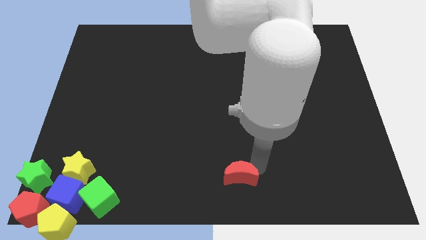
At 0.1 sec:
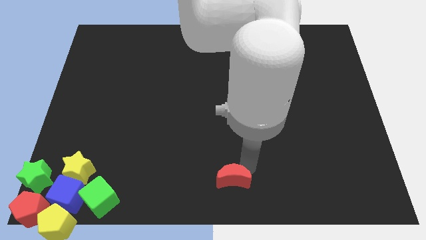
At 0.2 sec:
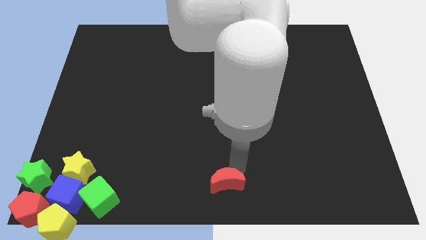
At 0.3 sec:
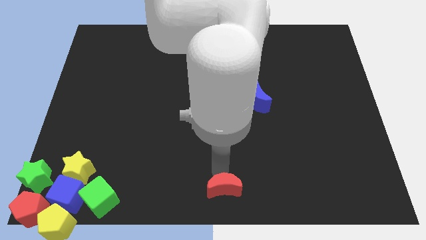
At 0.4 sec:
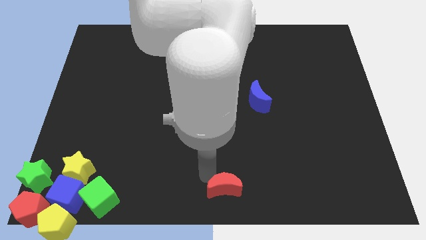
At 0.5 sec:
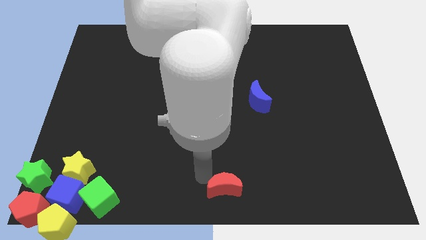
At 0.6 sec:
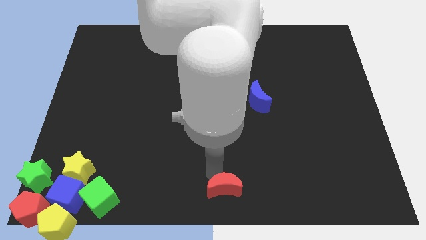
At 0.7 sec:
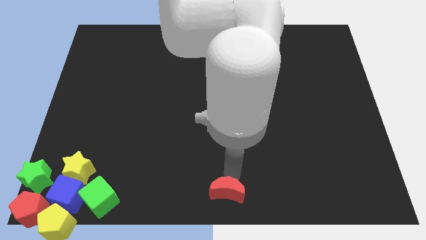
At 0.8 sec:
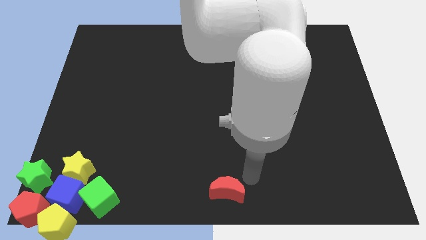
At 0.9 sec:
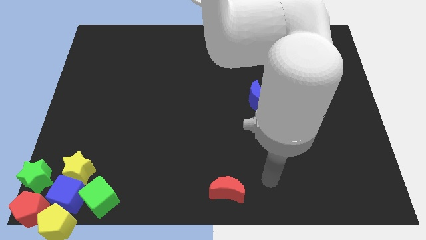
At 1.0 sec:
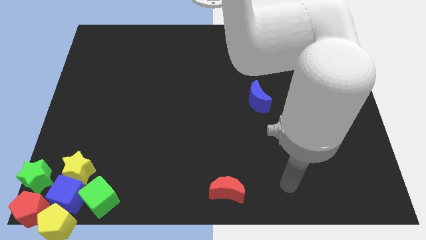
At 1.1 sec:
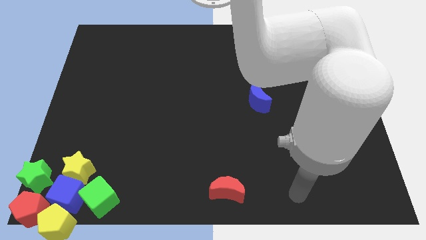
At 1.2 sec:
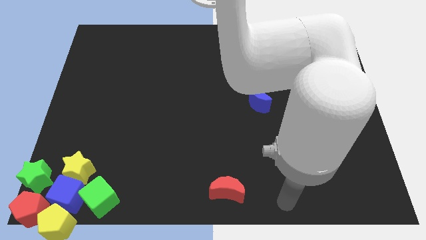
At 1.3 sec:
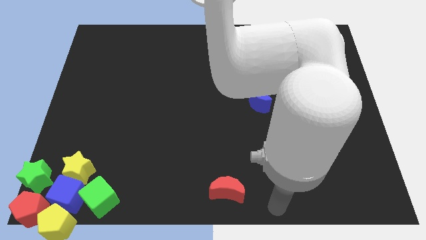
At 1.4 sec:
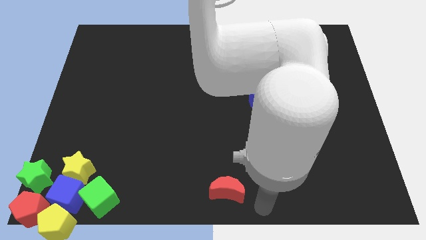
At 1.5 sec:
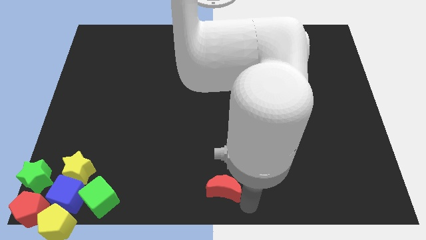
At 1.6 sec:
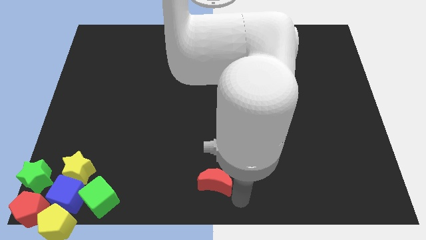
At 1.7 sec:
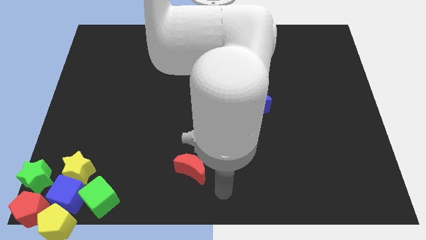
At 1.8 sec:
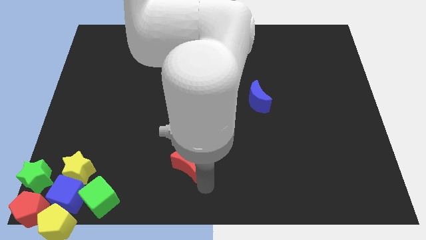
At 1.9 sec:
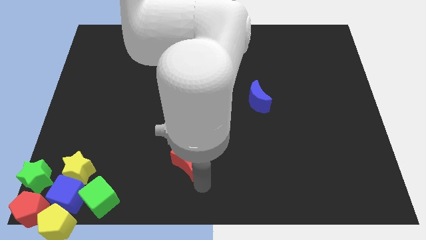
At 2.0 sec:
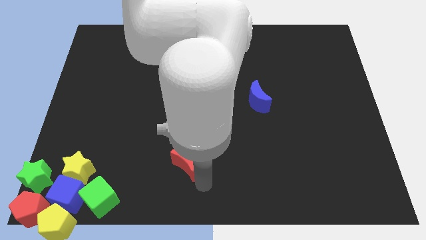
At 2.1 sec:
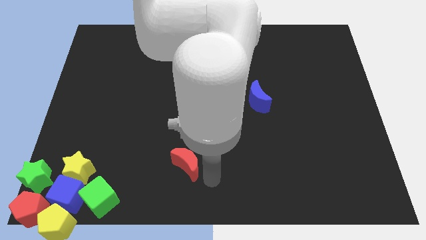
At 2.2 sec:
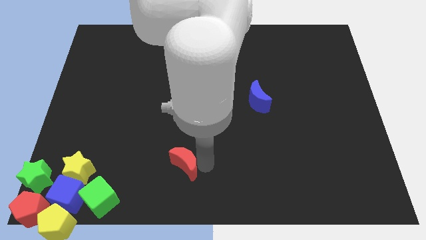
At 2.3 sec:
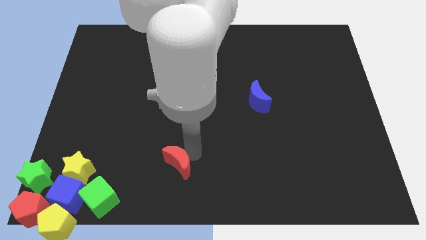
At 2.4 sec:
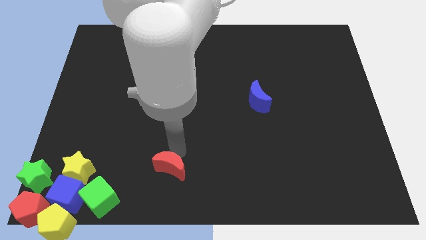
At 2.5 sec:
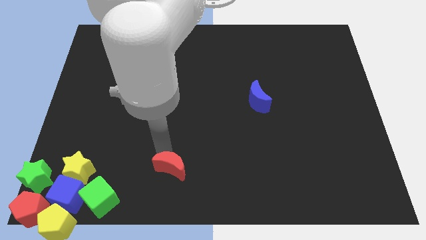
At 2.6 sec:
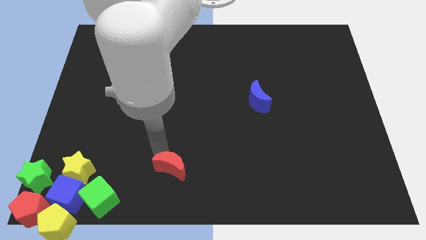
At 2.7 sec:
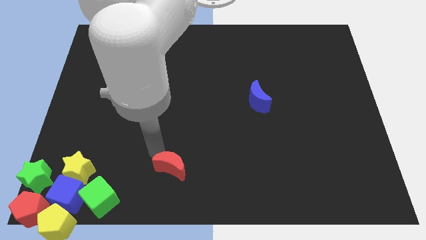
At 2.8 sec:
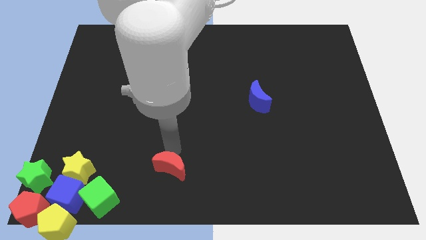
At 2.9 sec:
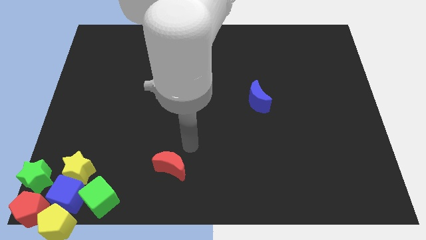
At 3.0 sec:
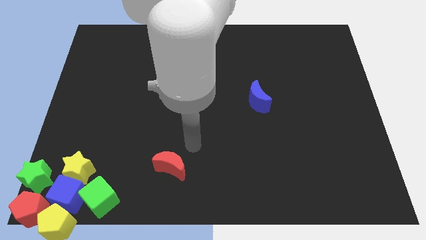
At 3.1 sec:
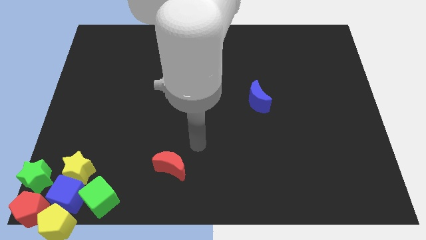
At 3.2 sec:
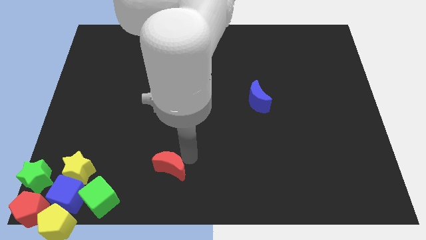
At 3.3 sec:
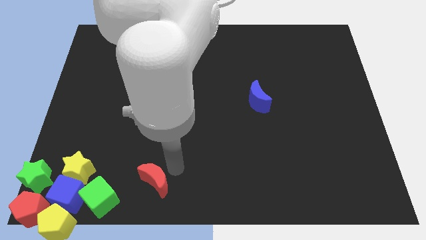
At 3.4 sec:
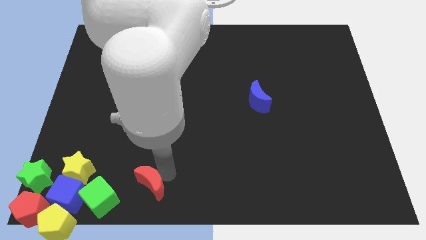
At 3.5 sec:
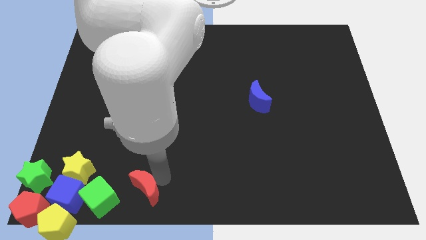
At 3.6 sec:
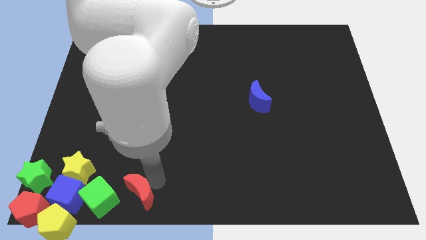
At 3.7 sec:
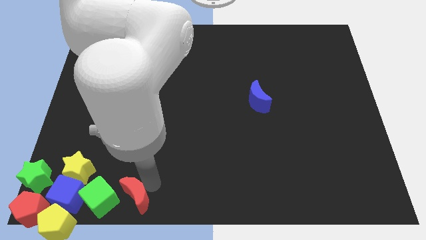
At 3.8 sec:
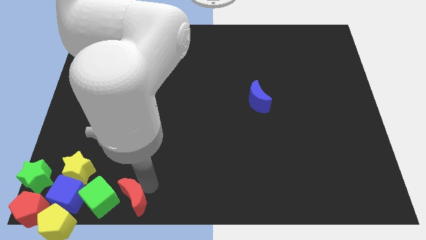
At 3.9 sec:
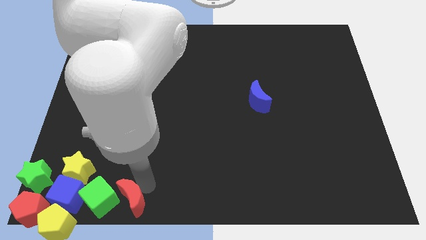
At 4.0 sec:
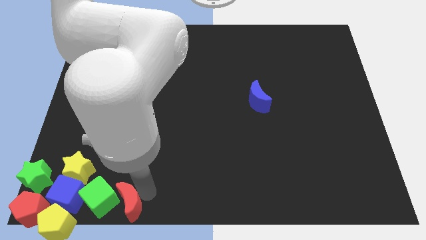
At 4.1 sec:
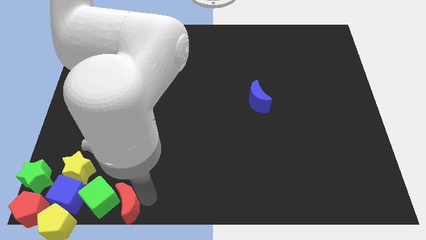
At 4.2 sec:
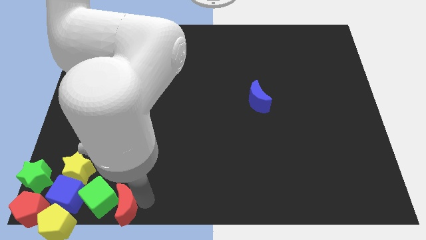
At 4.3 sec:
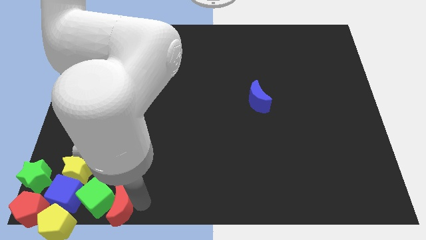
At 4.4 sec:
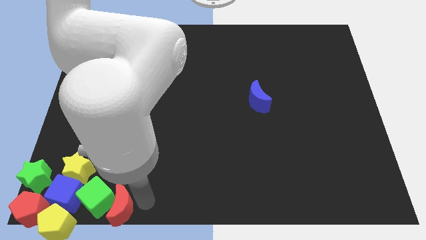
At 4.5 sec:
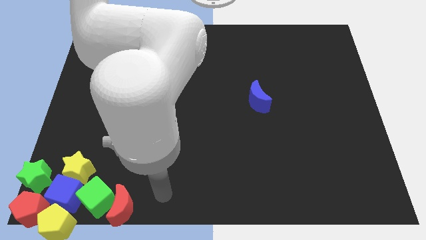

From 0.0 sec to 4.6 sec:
place the red crescent at the right side of the green cube

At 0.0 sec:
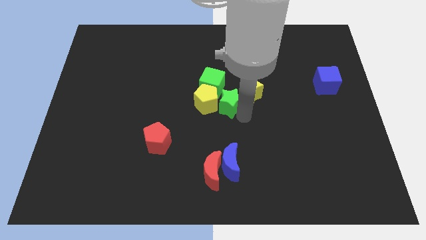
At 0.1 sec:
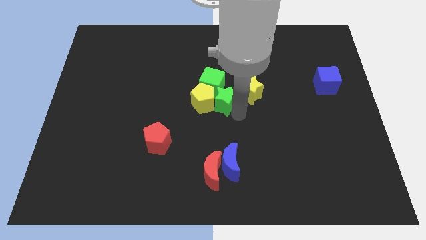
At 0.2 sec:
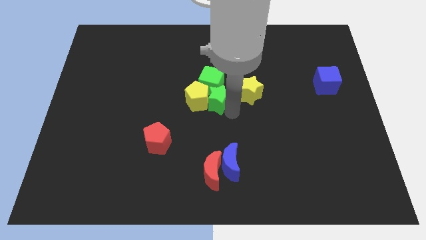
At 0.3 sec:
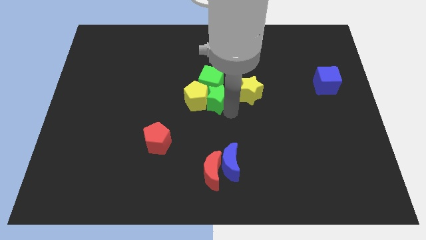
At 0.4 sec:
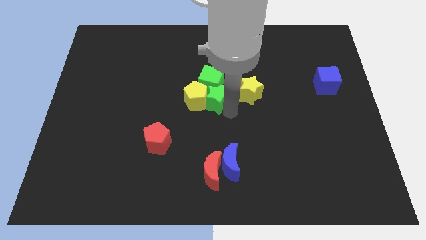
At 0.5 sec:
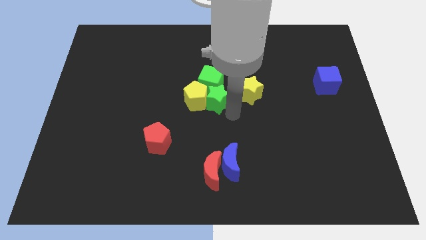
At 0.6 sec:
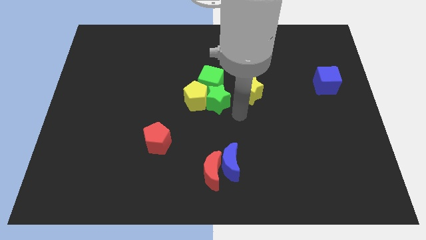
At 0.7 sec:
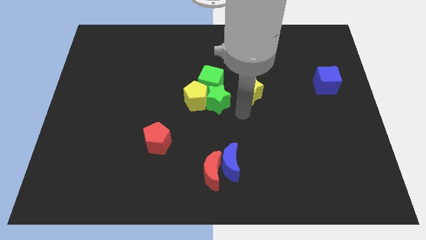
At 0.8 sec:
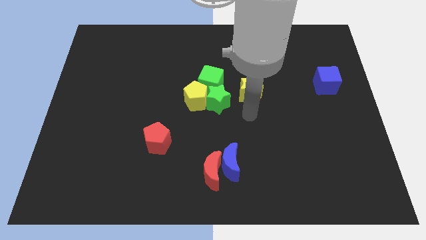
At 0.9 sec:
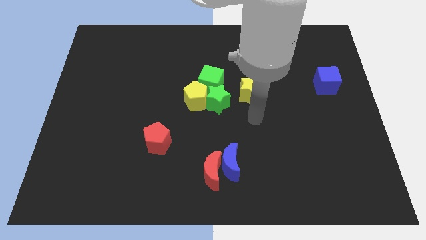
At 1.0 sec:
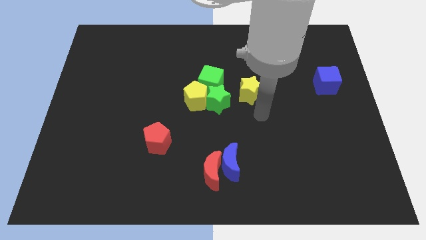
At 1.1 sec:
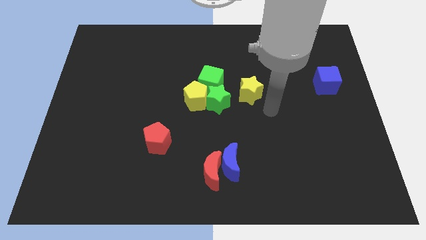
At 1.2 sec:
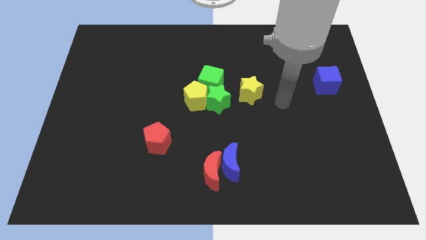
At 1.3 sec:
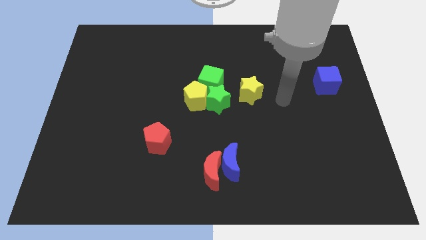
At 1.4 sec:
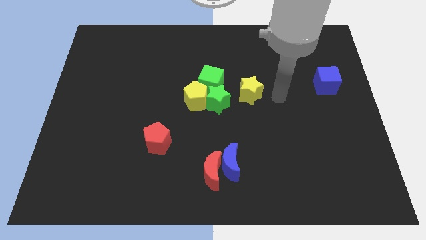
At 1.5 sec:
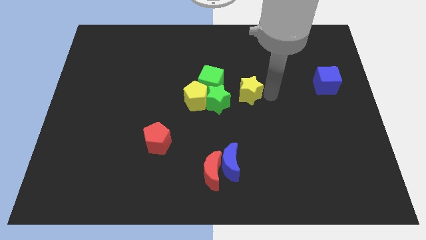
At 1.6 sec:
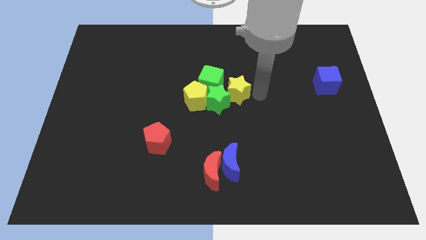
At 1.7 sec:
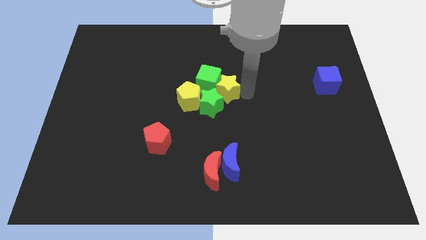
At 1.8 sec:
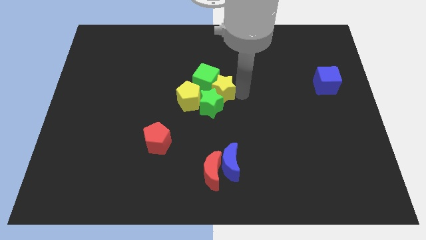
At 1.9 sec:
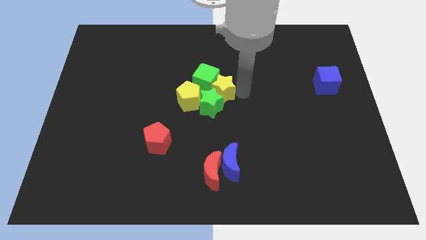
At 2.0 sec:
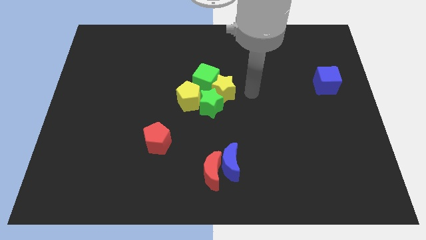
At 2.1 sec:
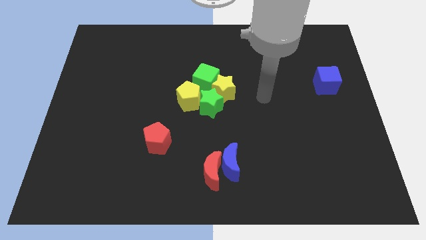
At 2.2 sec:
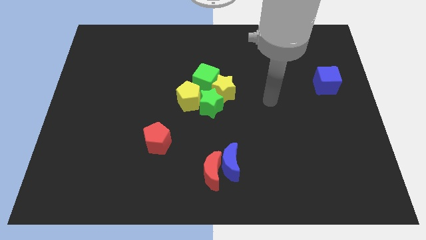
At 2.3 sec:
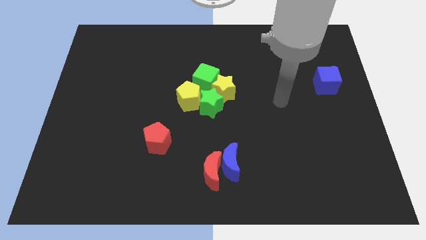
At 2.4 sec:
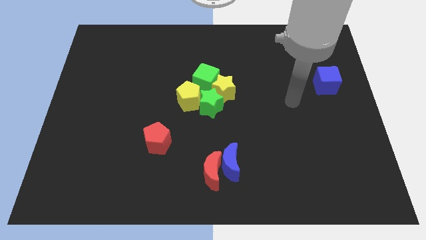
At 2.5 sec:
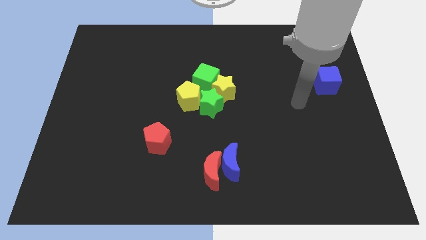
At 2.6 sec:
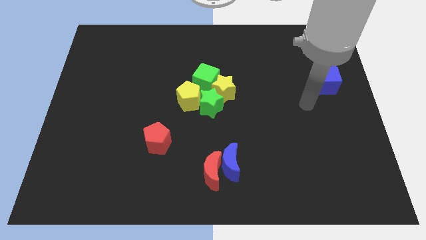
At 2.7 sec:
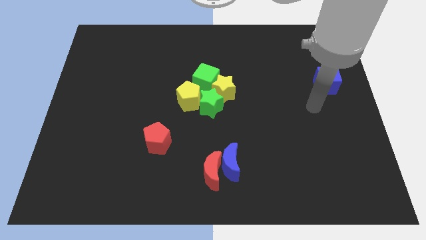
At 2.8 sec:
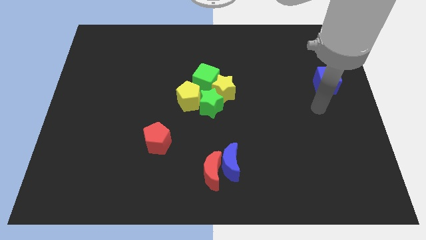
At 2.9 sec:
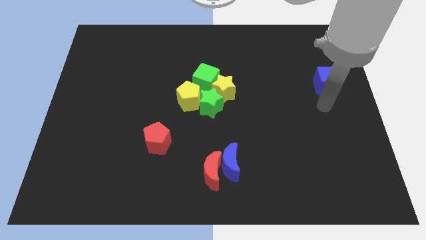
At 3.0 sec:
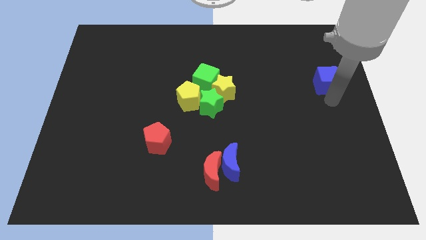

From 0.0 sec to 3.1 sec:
place your hand below the blue cube

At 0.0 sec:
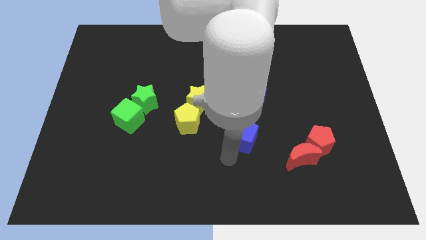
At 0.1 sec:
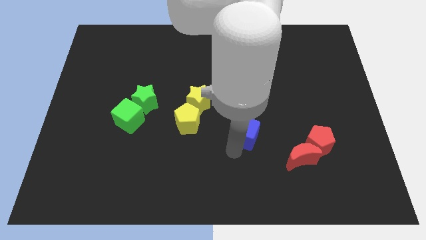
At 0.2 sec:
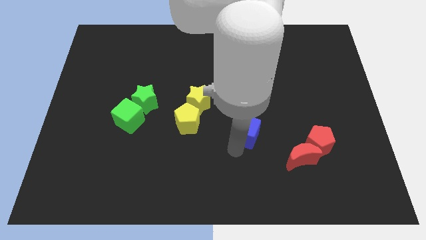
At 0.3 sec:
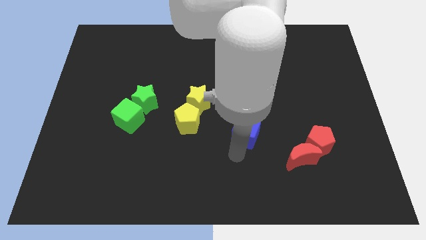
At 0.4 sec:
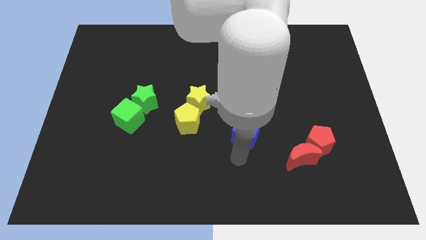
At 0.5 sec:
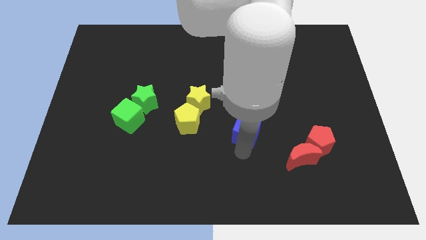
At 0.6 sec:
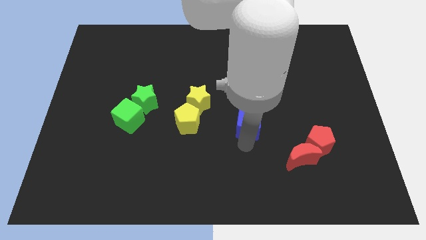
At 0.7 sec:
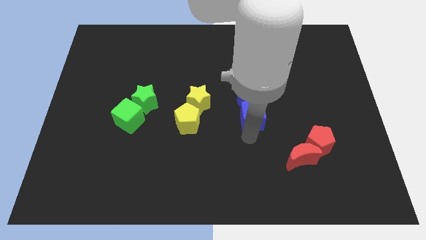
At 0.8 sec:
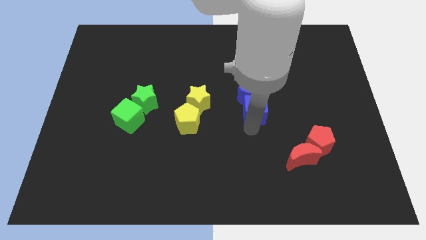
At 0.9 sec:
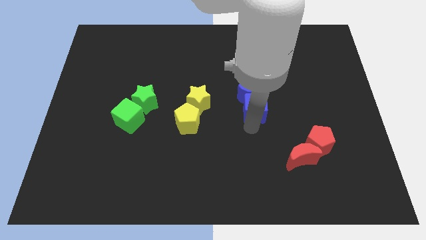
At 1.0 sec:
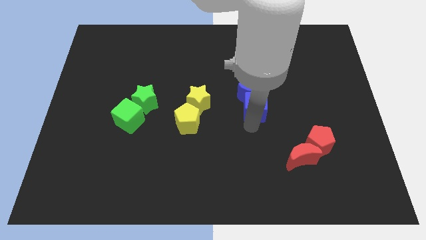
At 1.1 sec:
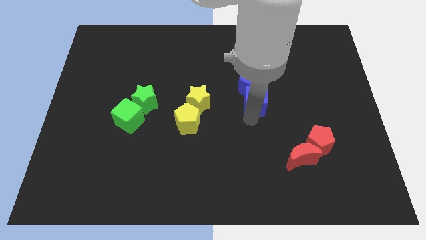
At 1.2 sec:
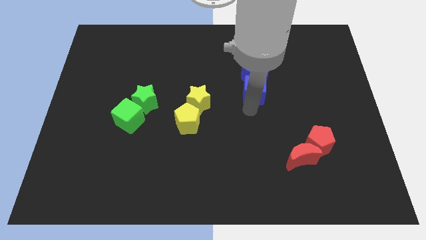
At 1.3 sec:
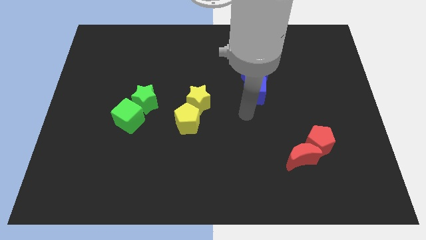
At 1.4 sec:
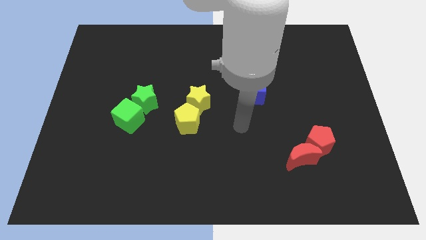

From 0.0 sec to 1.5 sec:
push the blue cube into blue crescent
